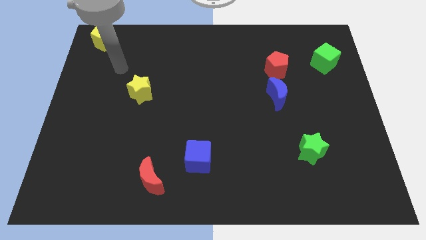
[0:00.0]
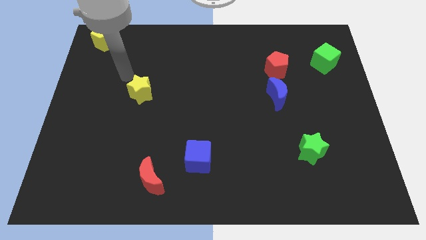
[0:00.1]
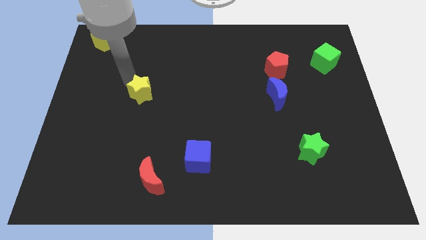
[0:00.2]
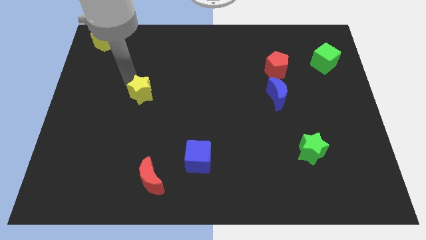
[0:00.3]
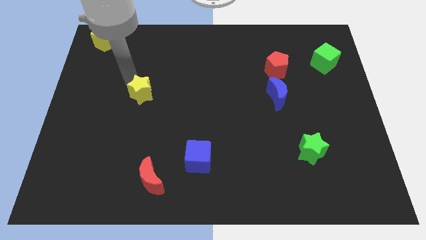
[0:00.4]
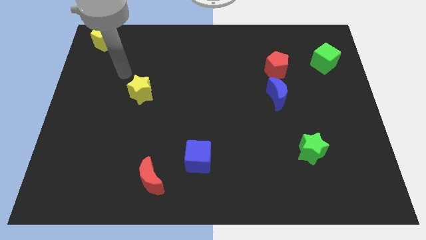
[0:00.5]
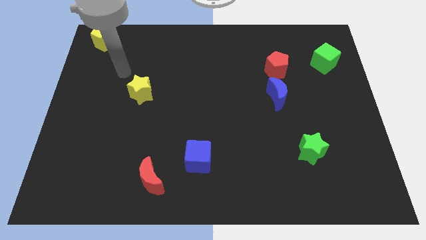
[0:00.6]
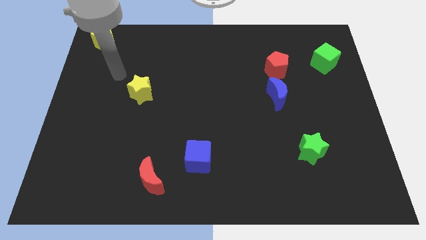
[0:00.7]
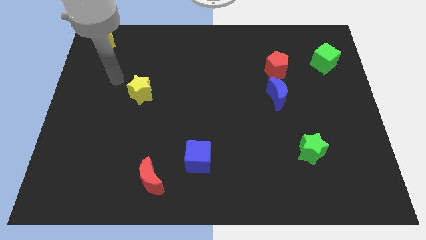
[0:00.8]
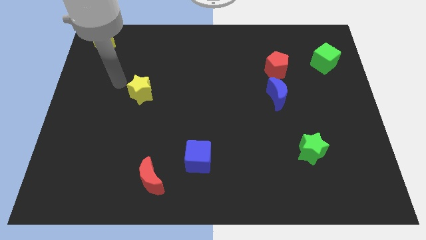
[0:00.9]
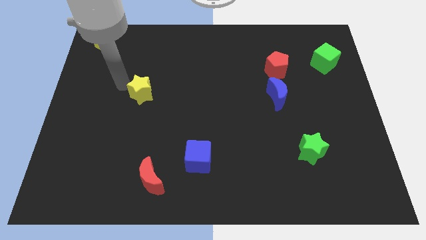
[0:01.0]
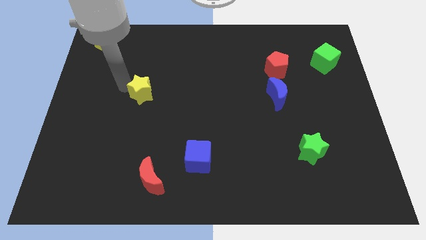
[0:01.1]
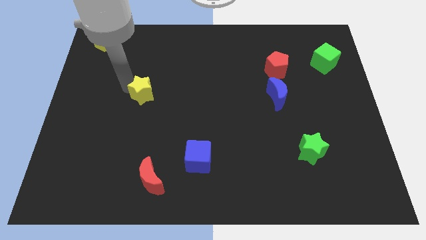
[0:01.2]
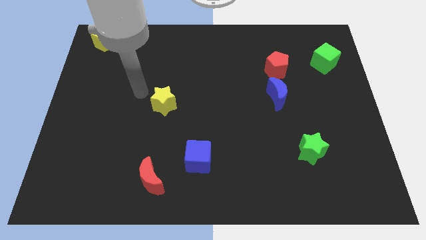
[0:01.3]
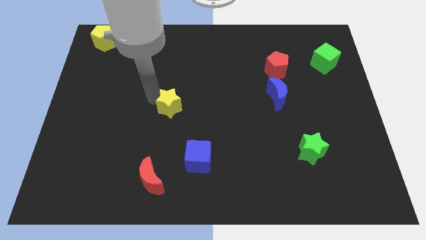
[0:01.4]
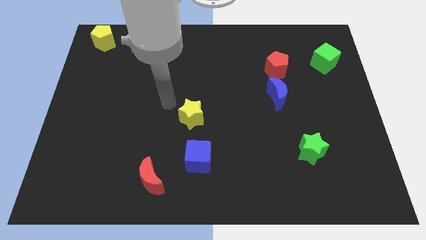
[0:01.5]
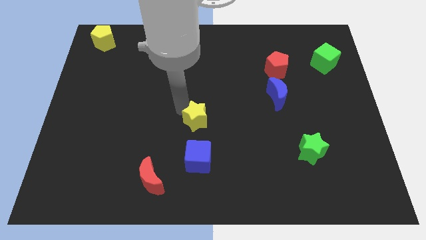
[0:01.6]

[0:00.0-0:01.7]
move the yellow star towards the center of the board

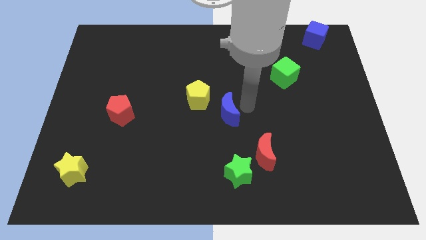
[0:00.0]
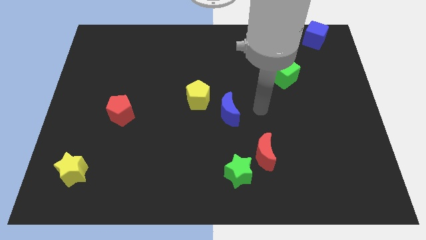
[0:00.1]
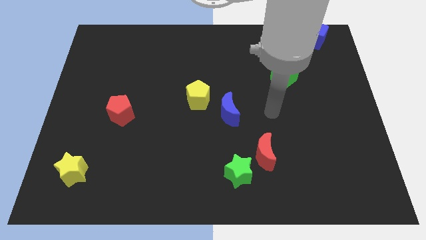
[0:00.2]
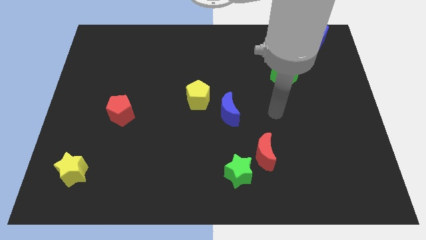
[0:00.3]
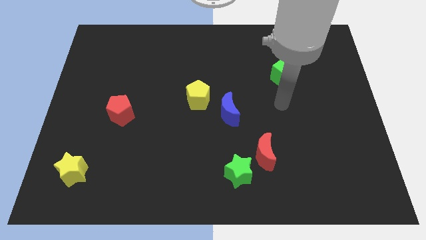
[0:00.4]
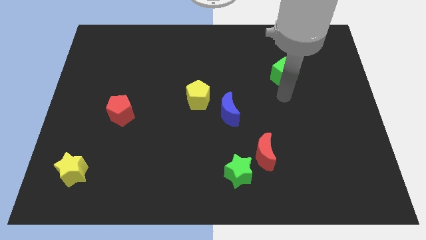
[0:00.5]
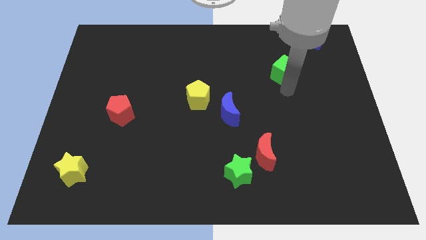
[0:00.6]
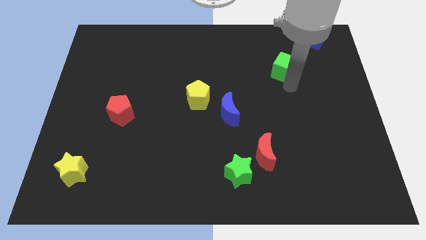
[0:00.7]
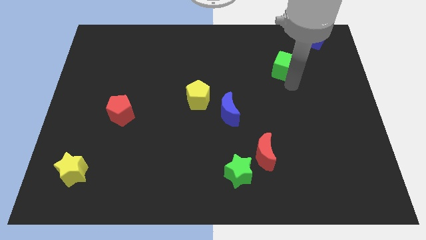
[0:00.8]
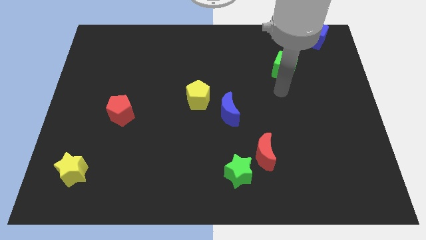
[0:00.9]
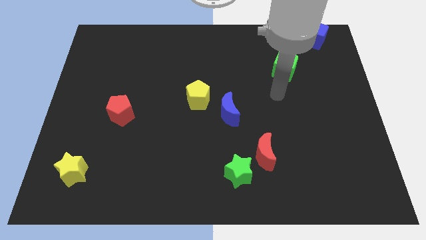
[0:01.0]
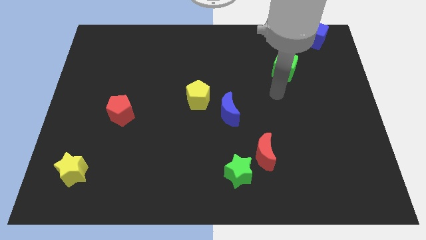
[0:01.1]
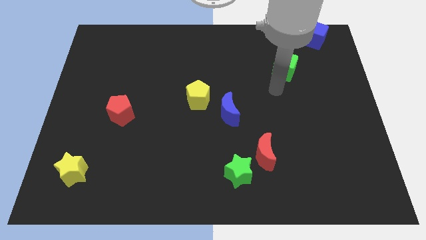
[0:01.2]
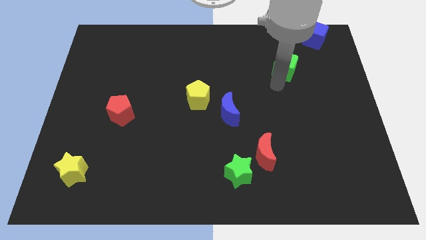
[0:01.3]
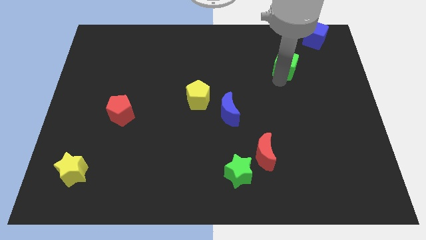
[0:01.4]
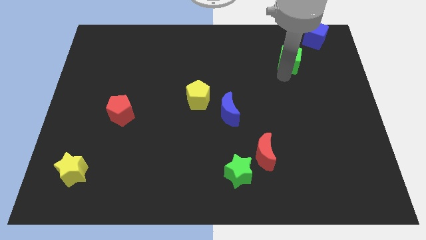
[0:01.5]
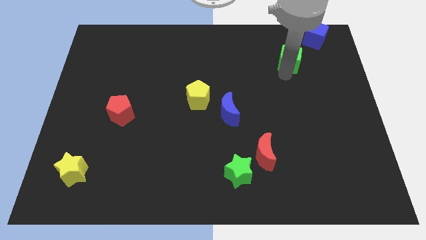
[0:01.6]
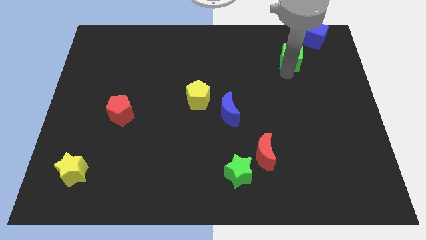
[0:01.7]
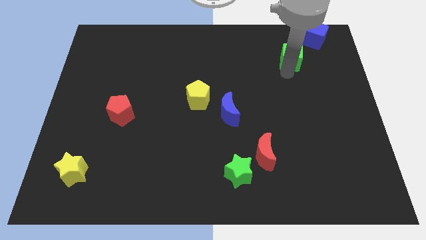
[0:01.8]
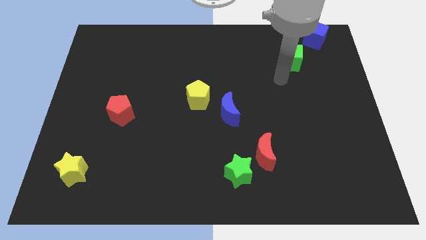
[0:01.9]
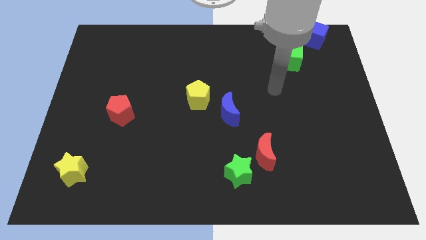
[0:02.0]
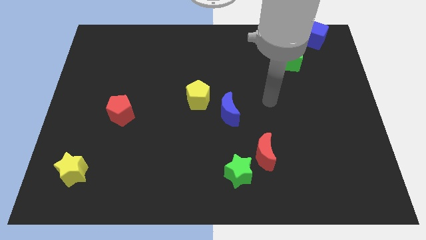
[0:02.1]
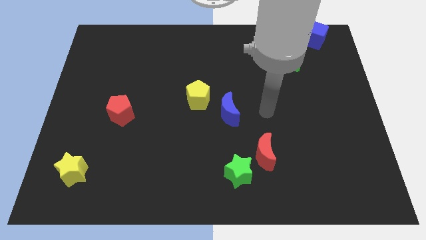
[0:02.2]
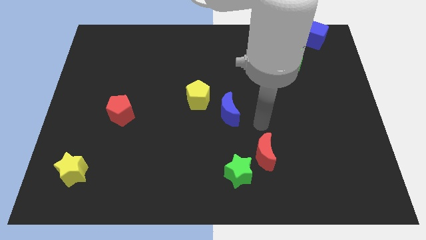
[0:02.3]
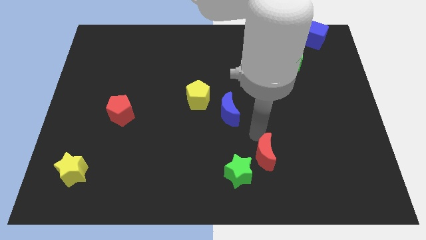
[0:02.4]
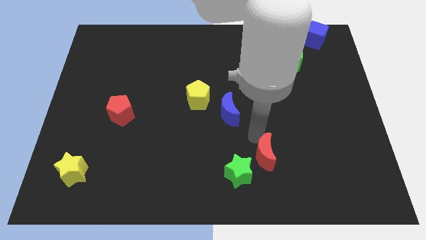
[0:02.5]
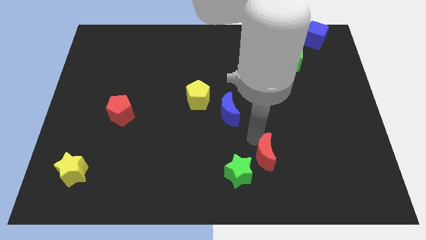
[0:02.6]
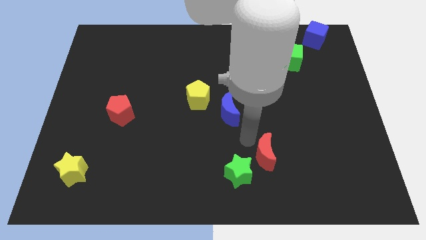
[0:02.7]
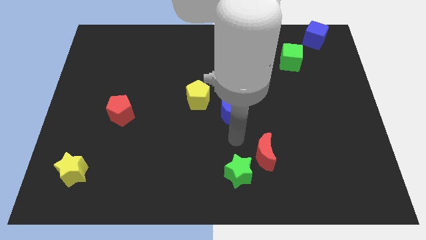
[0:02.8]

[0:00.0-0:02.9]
move the green cube below blue cube at the top right

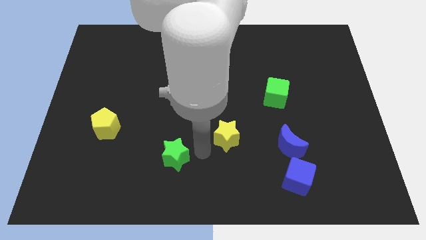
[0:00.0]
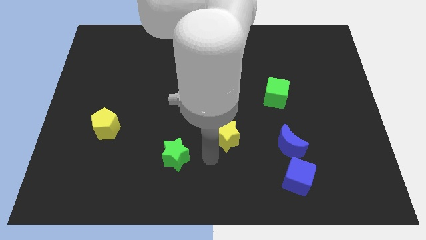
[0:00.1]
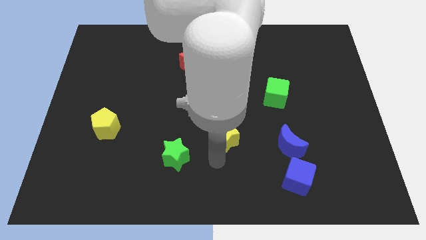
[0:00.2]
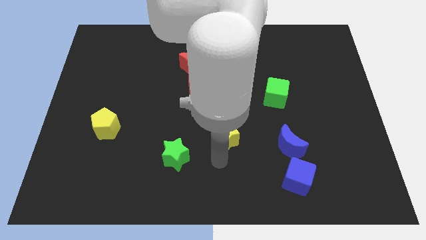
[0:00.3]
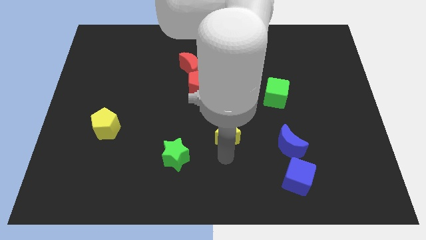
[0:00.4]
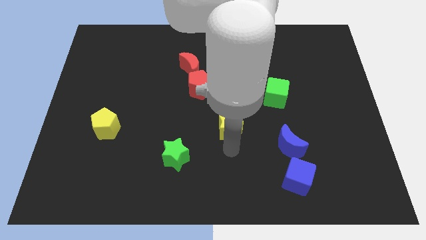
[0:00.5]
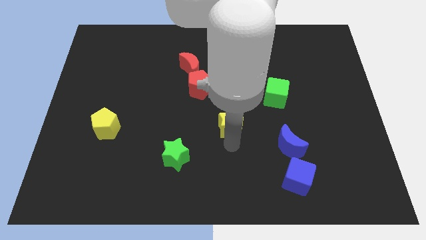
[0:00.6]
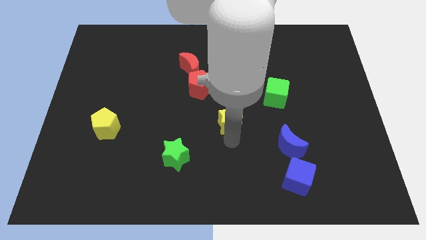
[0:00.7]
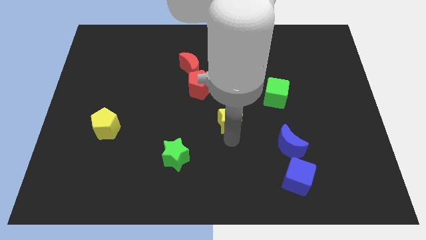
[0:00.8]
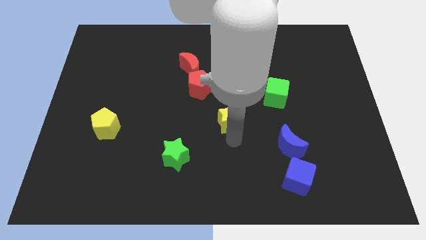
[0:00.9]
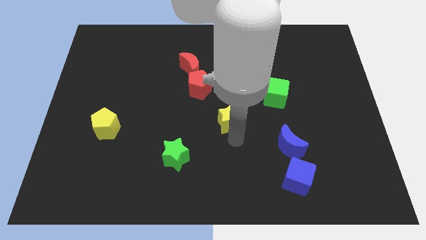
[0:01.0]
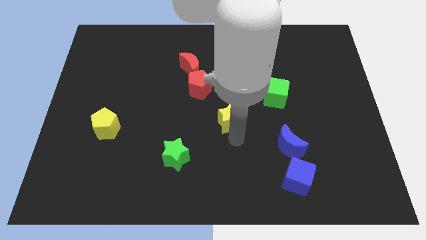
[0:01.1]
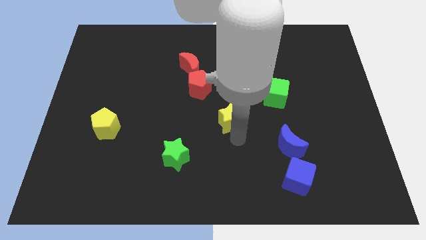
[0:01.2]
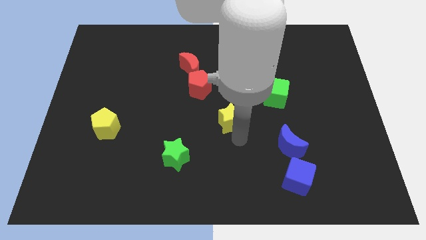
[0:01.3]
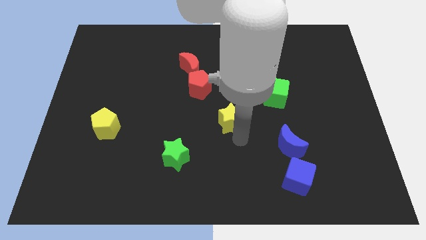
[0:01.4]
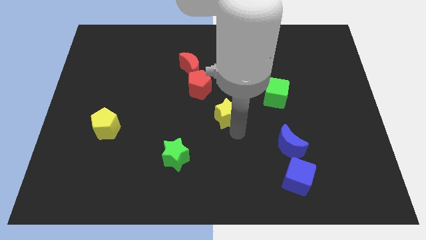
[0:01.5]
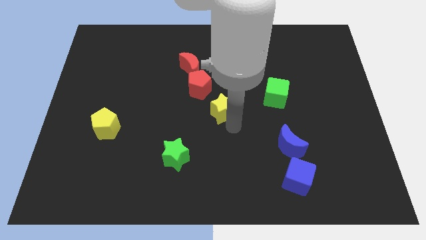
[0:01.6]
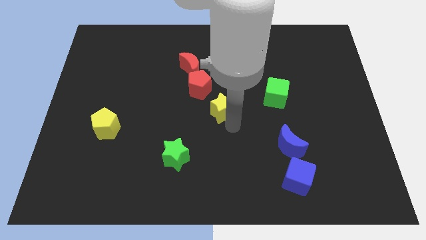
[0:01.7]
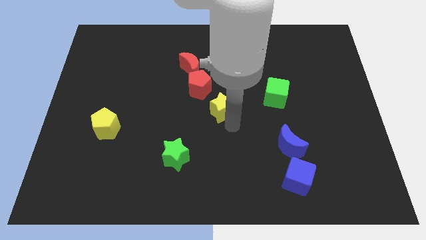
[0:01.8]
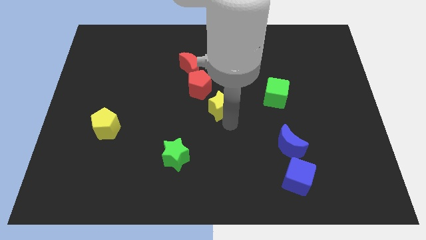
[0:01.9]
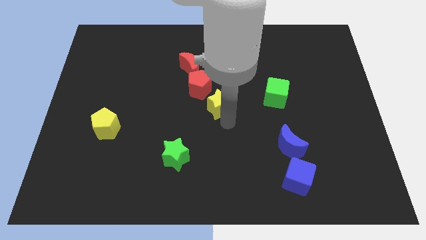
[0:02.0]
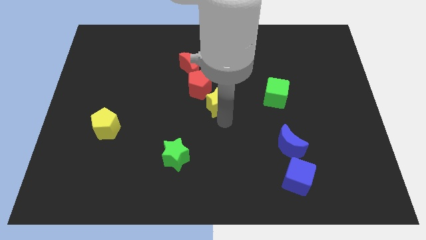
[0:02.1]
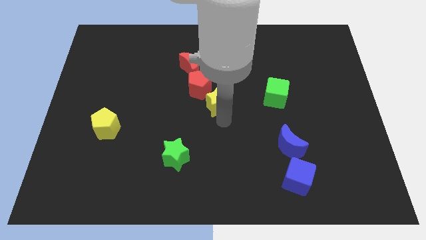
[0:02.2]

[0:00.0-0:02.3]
place yellow star to the center of the board

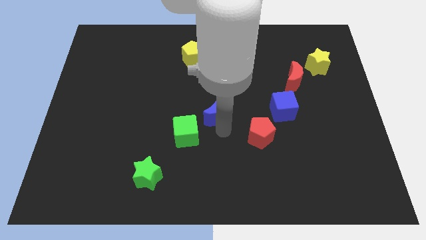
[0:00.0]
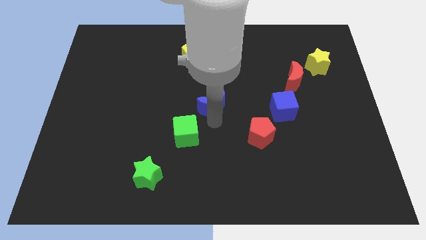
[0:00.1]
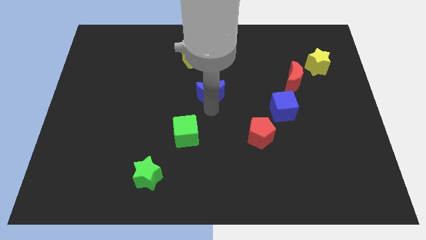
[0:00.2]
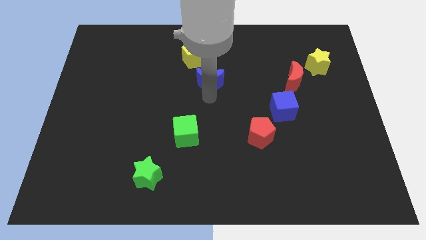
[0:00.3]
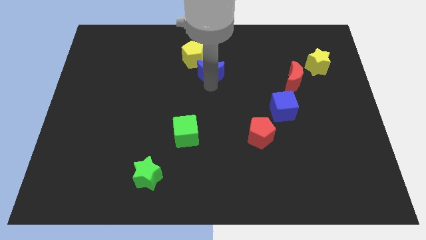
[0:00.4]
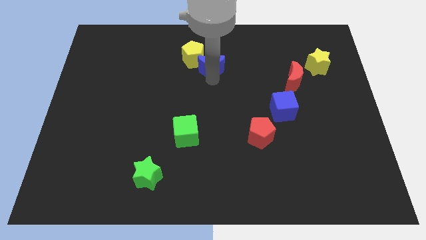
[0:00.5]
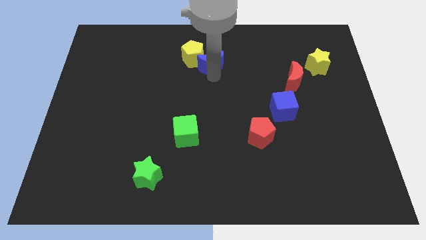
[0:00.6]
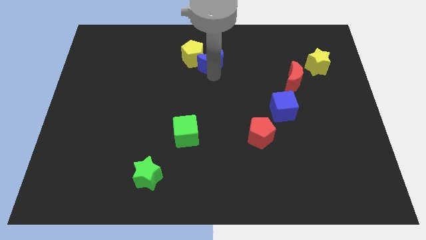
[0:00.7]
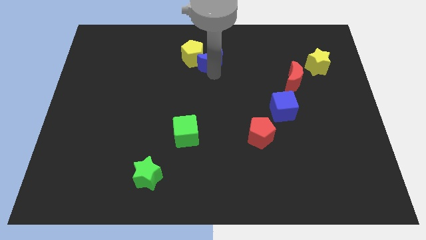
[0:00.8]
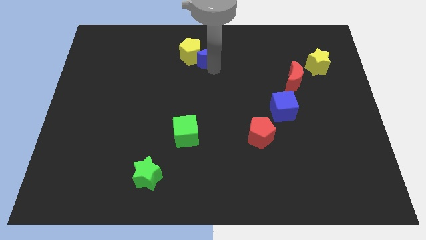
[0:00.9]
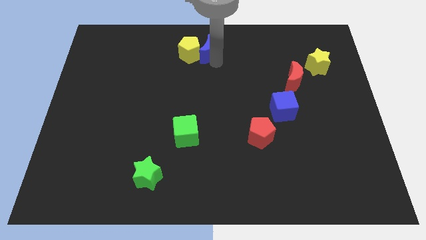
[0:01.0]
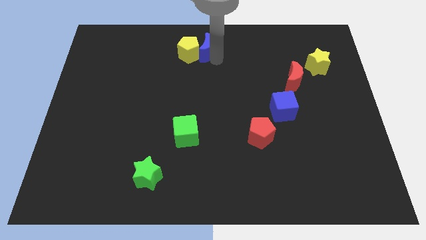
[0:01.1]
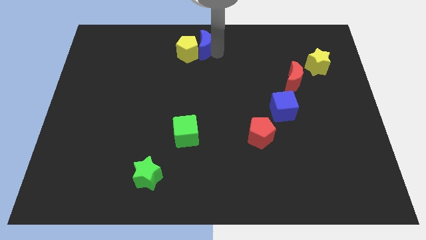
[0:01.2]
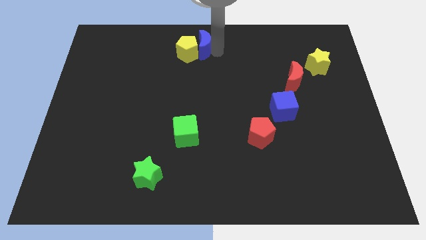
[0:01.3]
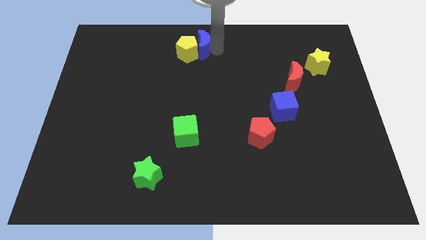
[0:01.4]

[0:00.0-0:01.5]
push the blue crescent to the right of the yellow pentagon

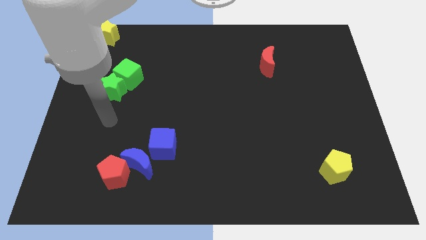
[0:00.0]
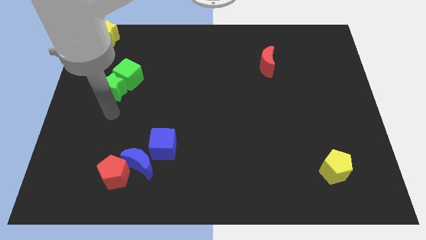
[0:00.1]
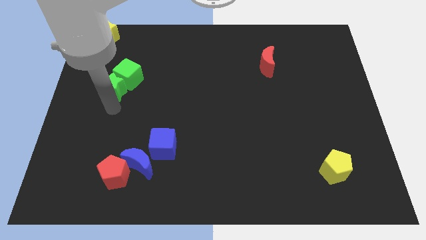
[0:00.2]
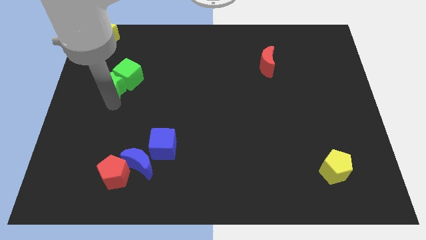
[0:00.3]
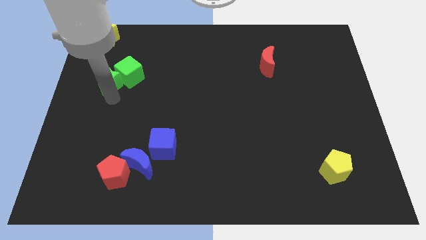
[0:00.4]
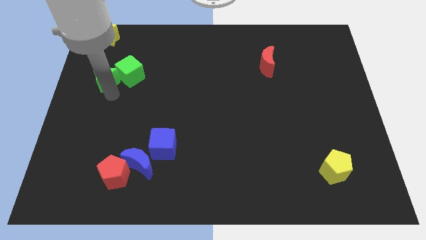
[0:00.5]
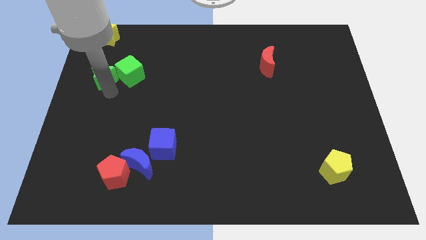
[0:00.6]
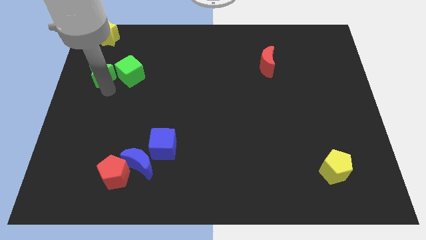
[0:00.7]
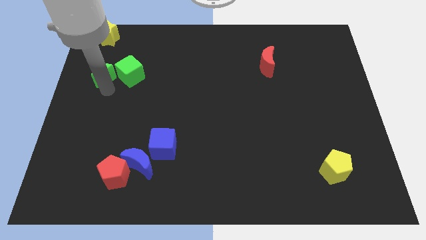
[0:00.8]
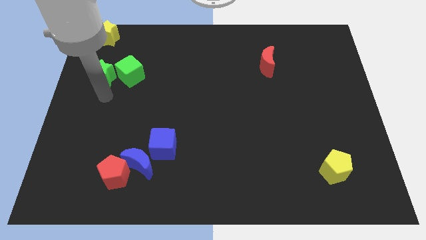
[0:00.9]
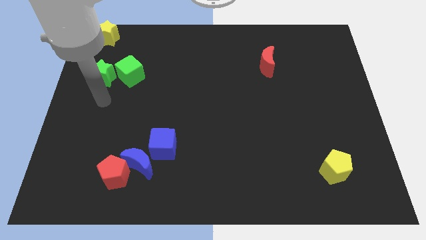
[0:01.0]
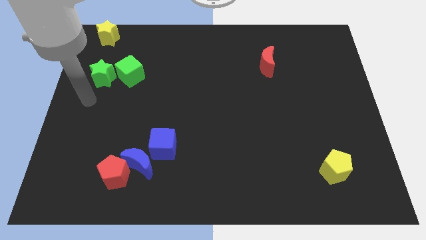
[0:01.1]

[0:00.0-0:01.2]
place the green star to the bottom of the yellow star
